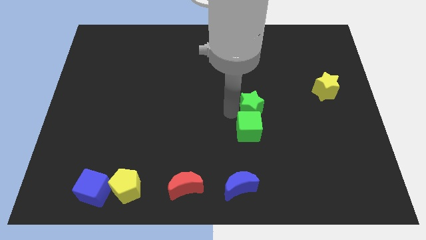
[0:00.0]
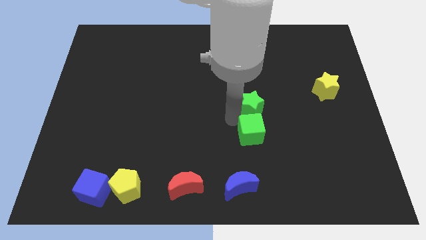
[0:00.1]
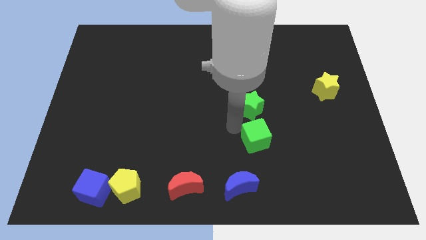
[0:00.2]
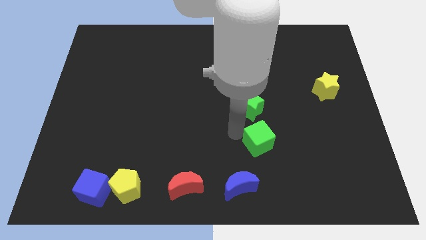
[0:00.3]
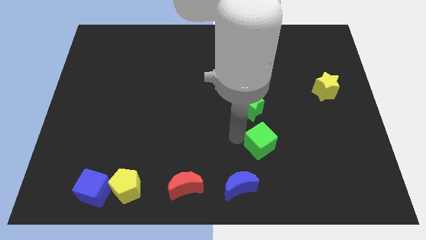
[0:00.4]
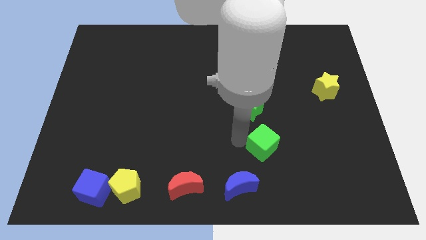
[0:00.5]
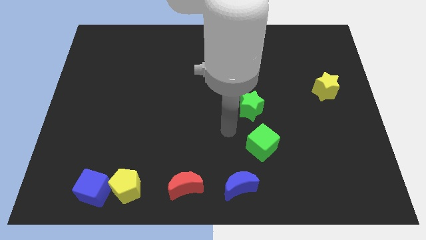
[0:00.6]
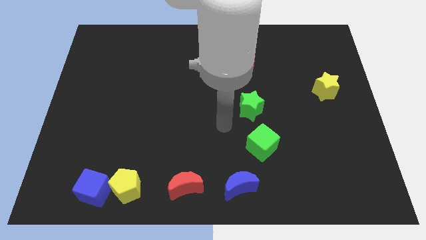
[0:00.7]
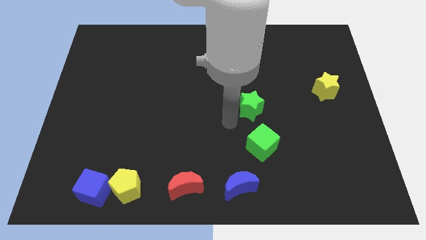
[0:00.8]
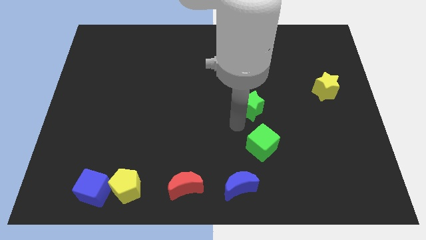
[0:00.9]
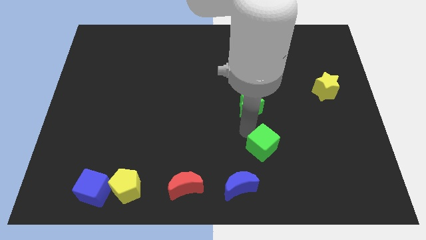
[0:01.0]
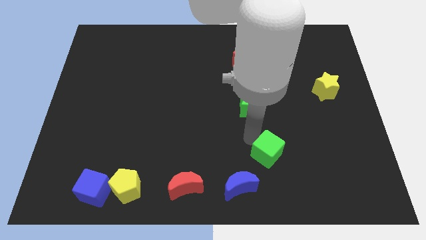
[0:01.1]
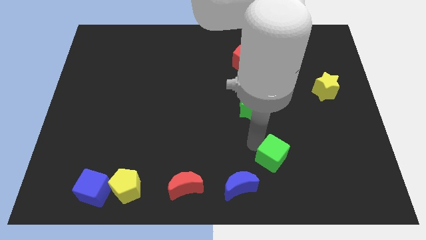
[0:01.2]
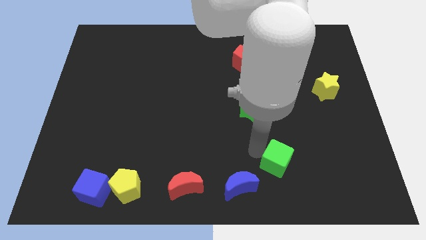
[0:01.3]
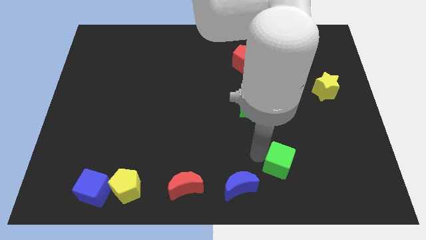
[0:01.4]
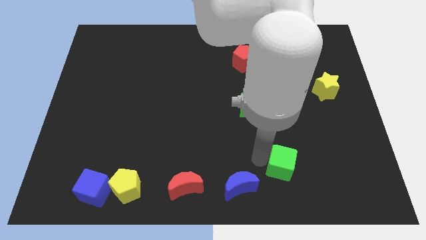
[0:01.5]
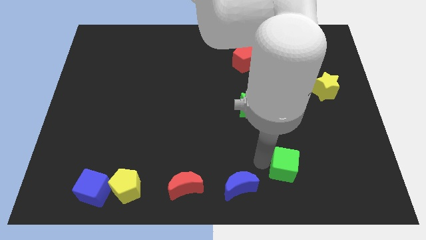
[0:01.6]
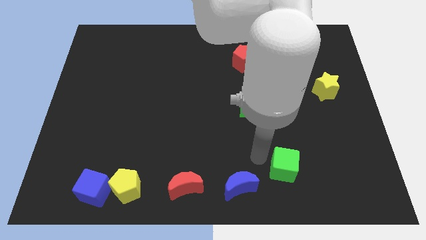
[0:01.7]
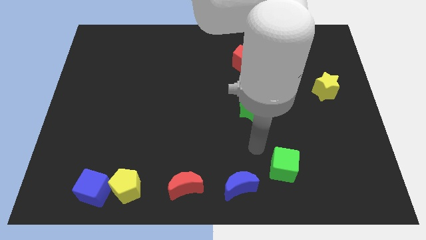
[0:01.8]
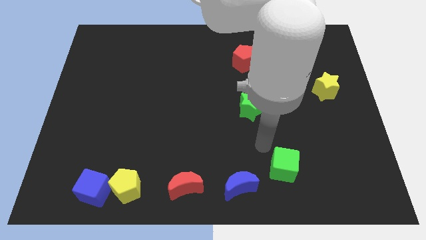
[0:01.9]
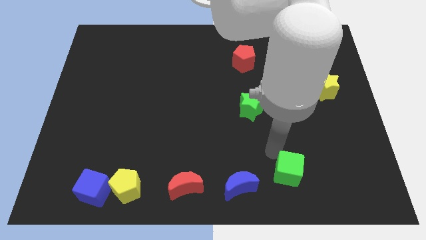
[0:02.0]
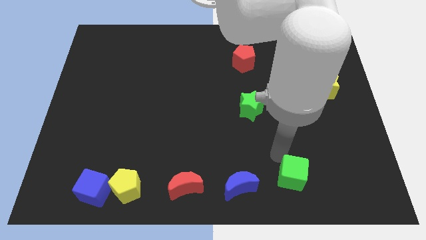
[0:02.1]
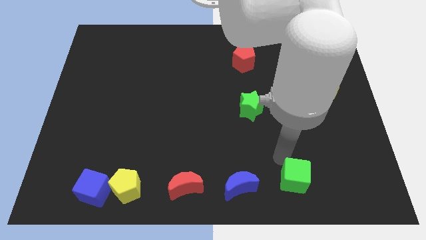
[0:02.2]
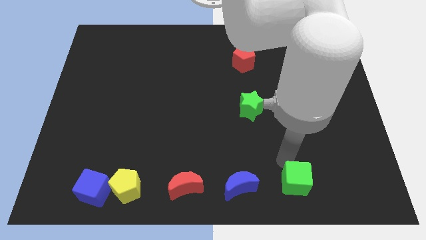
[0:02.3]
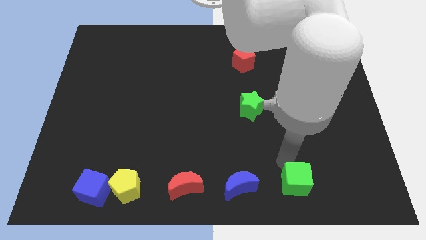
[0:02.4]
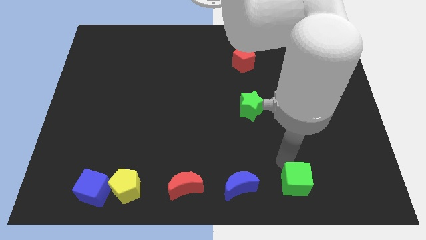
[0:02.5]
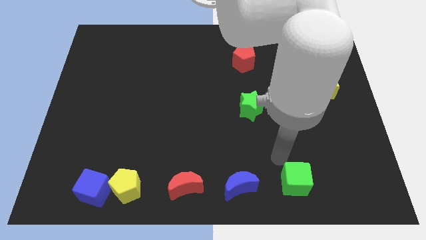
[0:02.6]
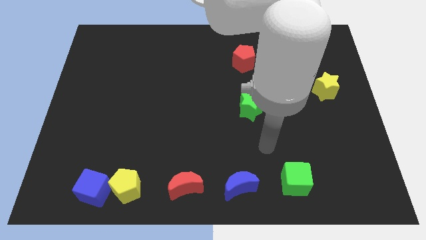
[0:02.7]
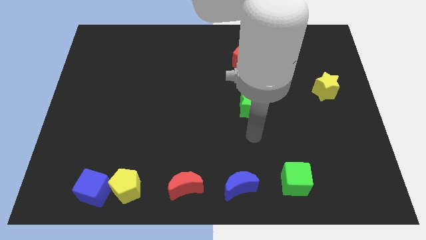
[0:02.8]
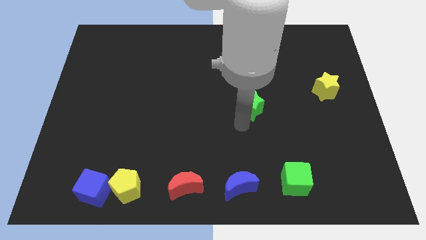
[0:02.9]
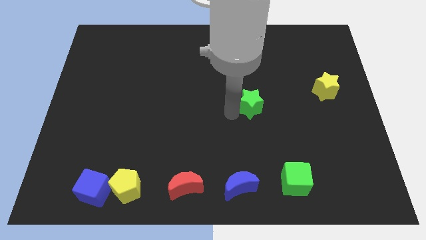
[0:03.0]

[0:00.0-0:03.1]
separate green cube from green star

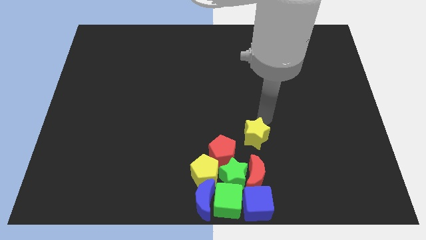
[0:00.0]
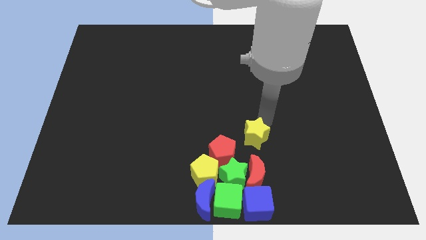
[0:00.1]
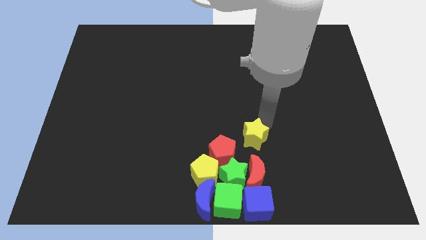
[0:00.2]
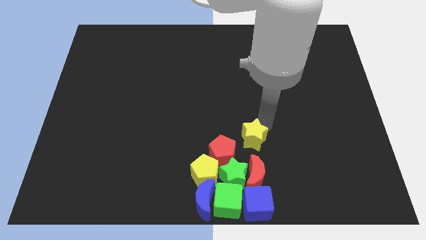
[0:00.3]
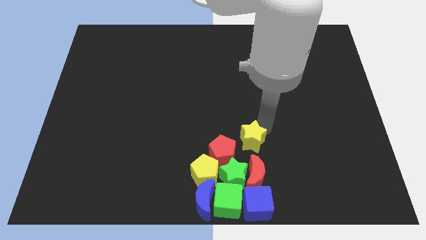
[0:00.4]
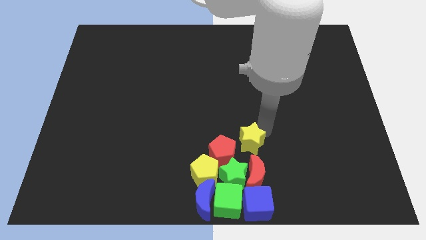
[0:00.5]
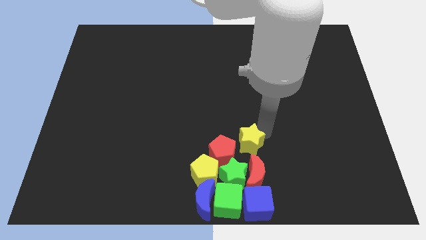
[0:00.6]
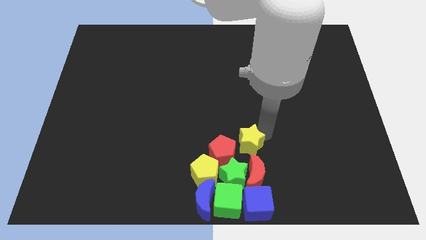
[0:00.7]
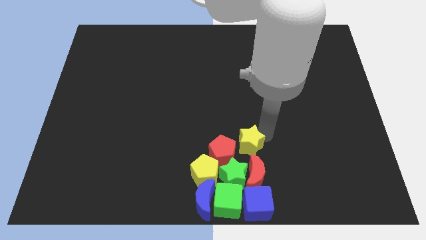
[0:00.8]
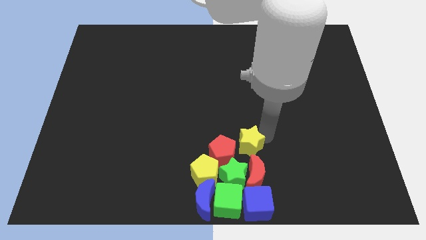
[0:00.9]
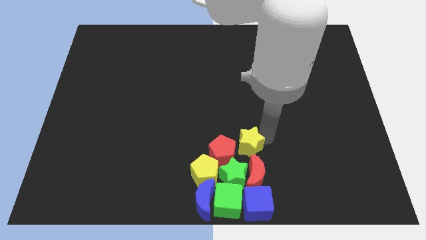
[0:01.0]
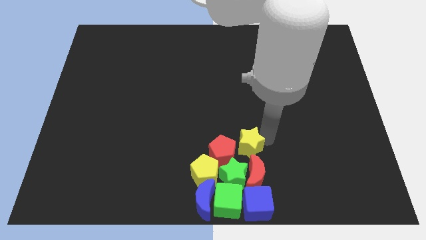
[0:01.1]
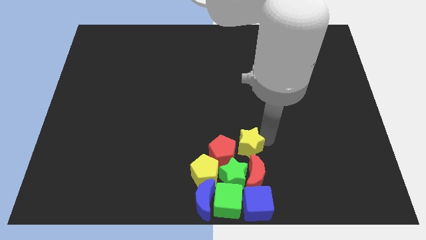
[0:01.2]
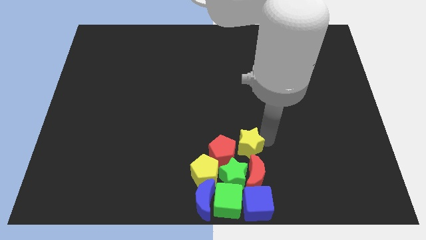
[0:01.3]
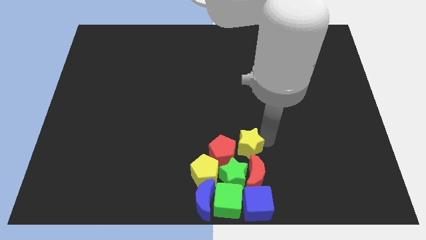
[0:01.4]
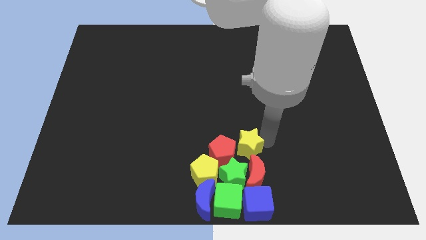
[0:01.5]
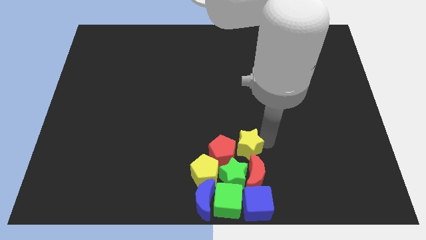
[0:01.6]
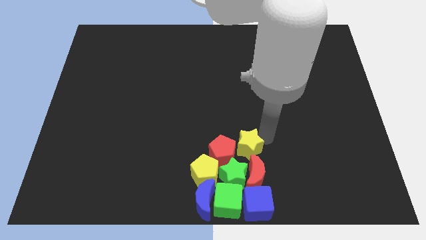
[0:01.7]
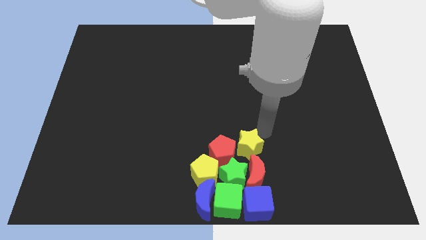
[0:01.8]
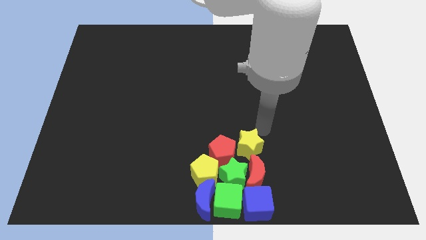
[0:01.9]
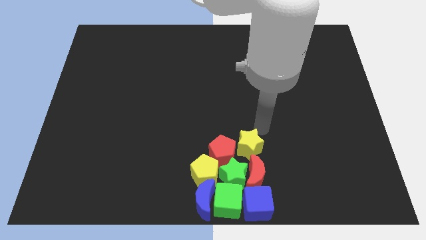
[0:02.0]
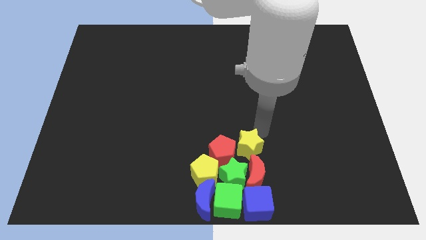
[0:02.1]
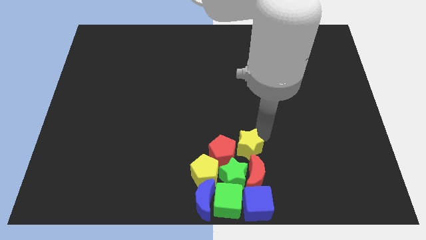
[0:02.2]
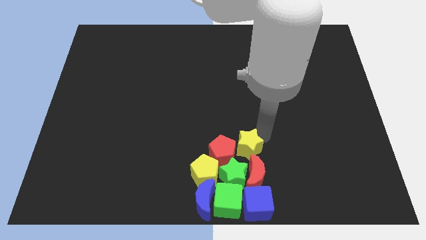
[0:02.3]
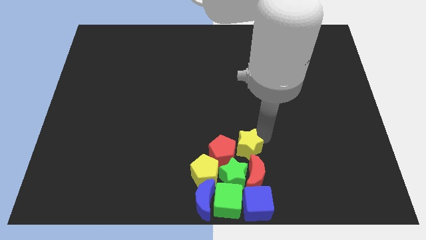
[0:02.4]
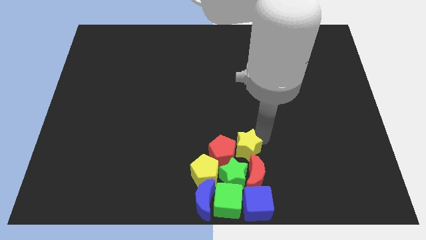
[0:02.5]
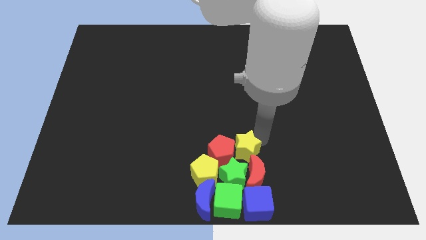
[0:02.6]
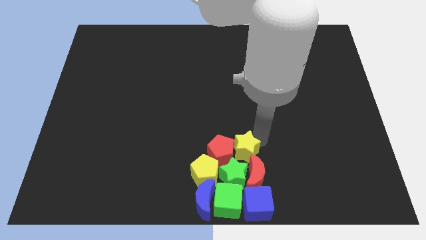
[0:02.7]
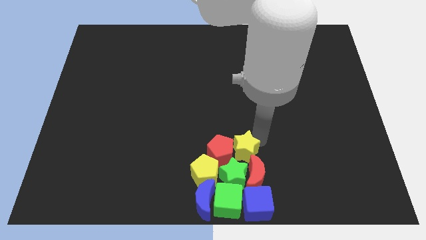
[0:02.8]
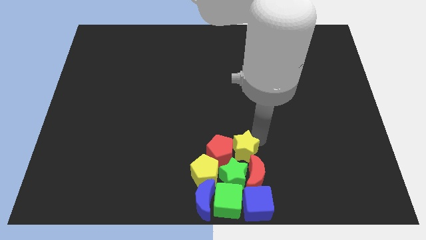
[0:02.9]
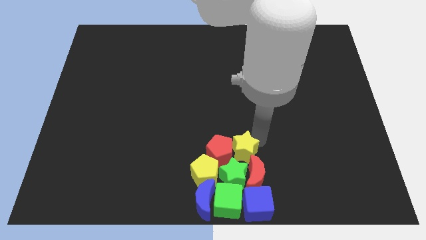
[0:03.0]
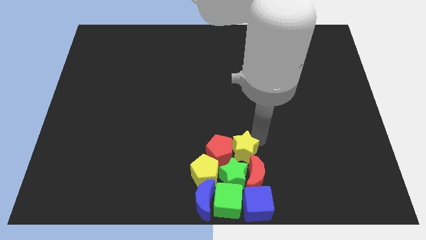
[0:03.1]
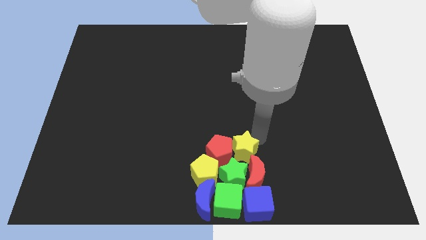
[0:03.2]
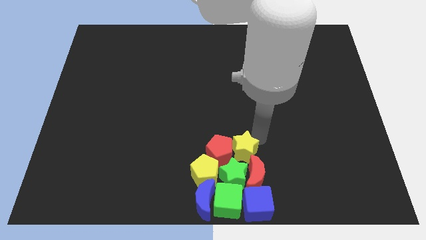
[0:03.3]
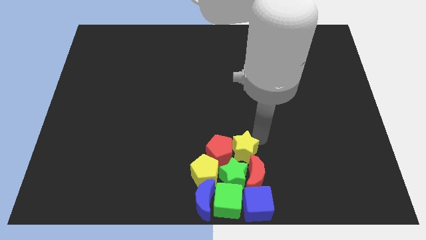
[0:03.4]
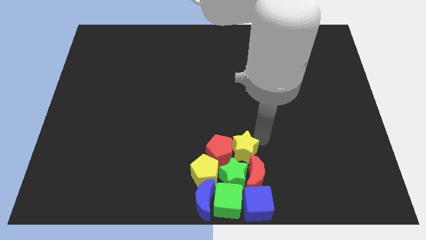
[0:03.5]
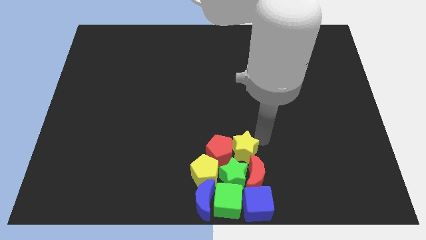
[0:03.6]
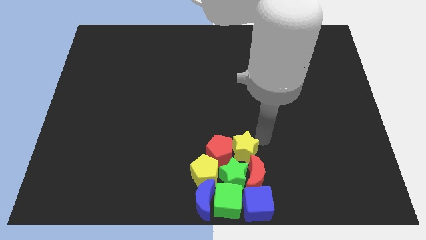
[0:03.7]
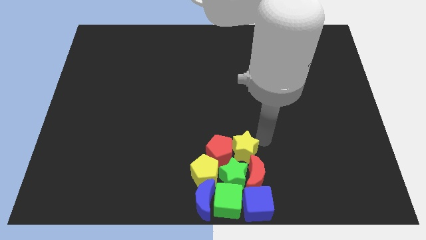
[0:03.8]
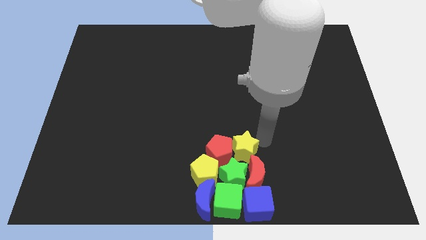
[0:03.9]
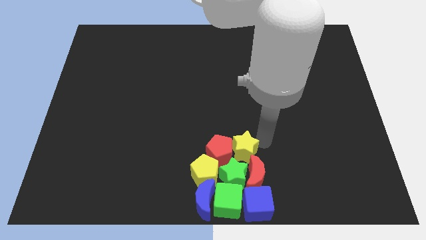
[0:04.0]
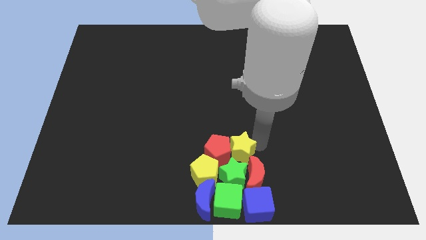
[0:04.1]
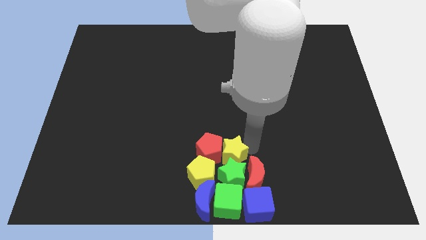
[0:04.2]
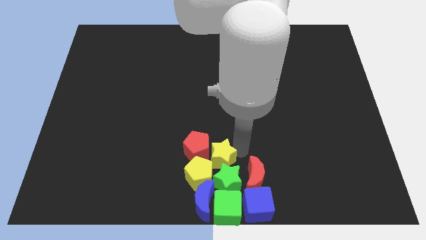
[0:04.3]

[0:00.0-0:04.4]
put the yellow star on top of the green star

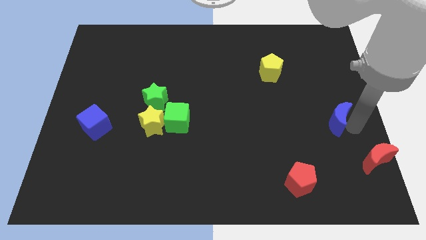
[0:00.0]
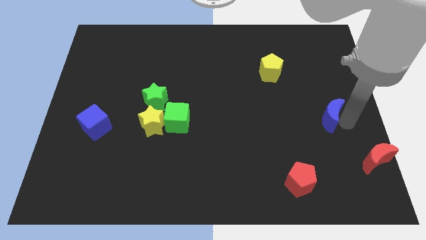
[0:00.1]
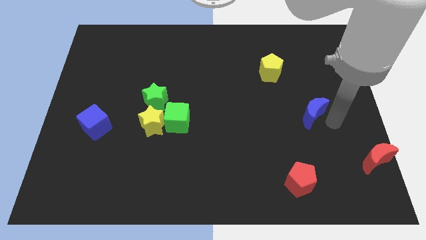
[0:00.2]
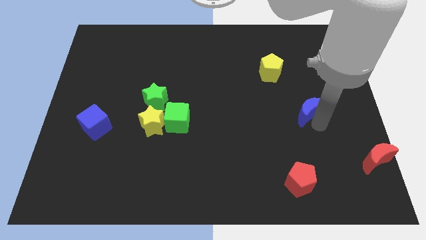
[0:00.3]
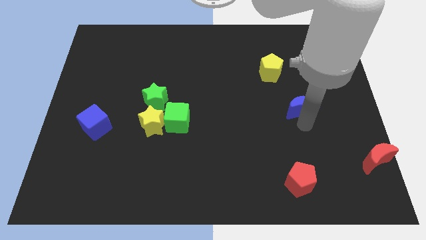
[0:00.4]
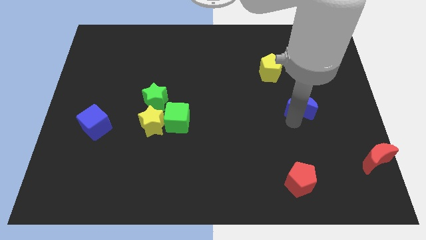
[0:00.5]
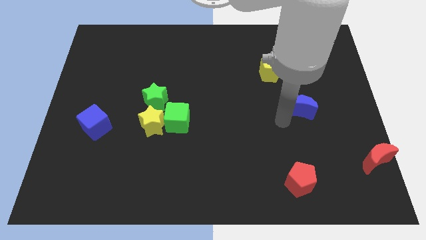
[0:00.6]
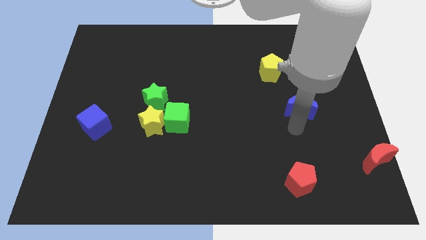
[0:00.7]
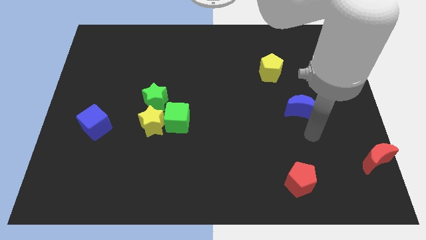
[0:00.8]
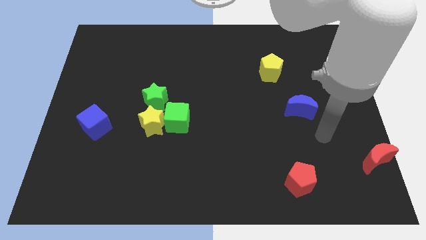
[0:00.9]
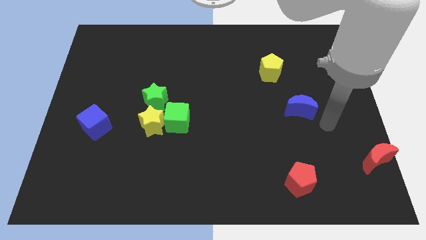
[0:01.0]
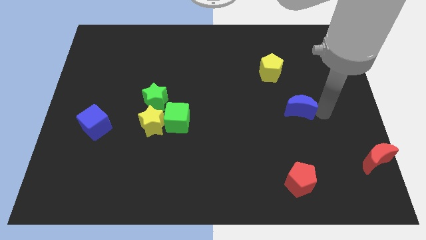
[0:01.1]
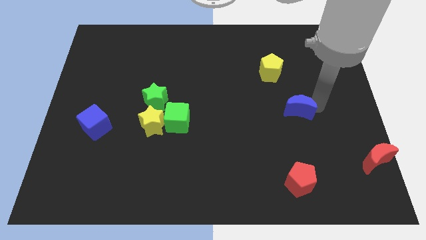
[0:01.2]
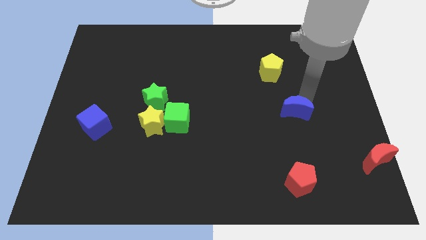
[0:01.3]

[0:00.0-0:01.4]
place the blue moon in between the yellow pentagon and red pentagon
